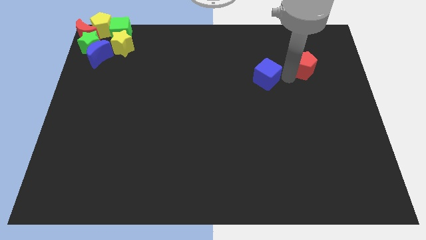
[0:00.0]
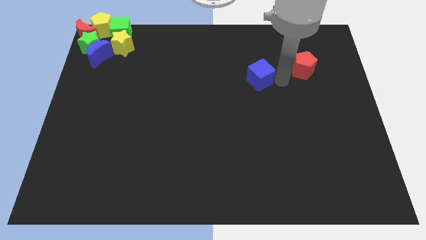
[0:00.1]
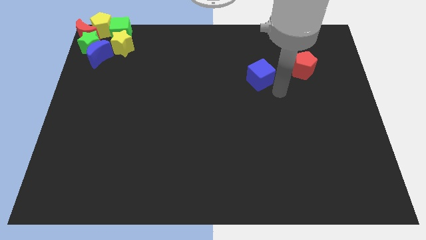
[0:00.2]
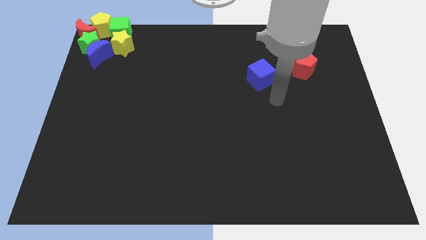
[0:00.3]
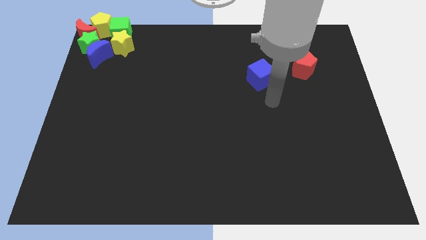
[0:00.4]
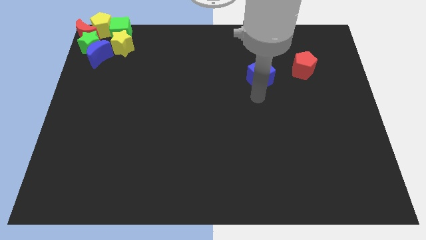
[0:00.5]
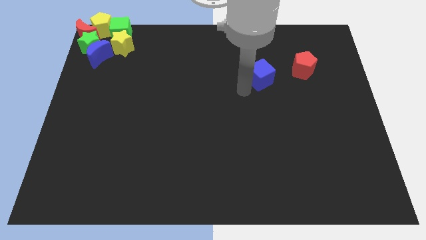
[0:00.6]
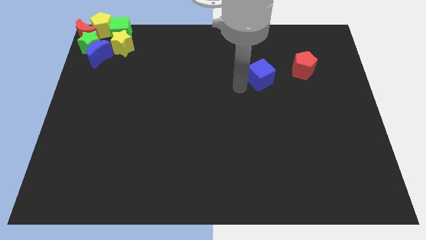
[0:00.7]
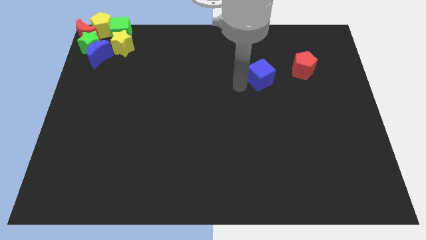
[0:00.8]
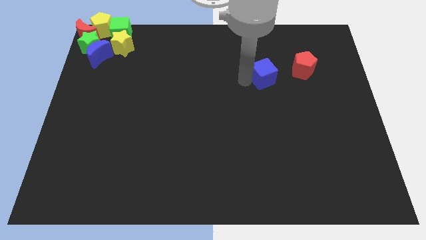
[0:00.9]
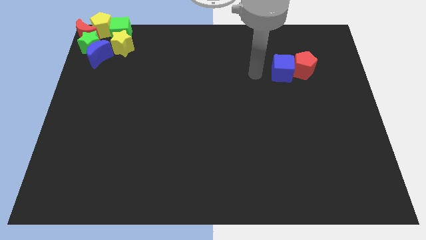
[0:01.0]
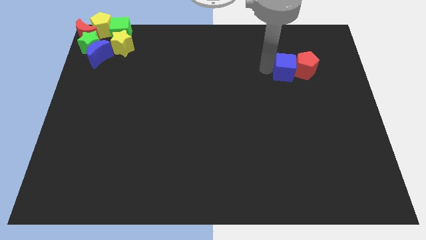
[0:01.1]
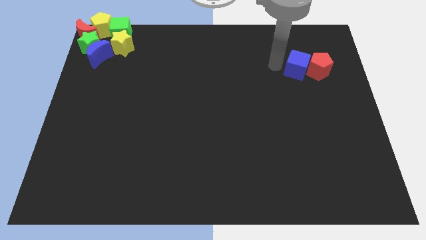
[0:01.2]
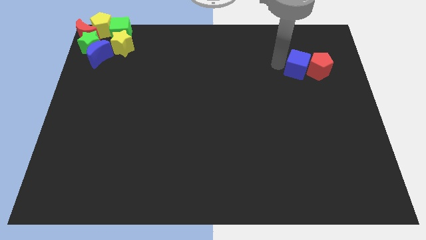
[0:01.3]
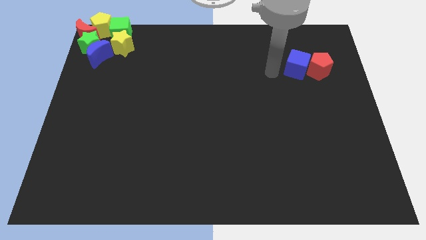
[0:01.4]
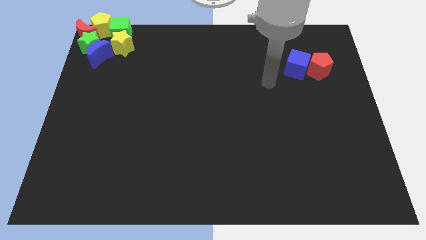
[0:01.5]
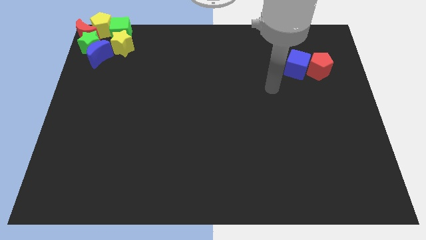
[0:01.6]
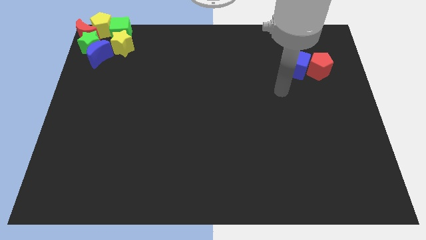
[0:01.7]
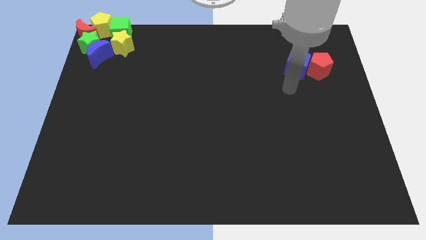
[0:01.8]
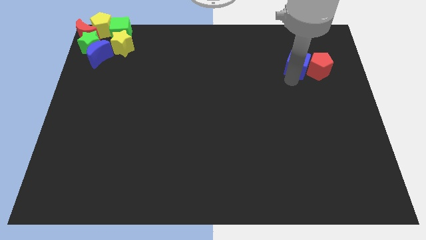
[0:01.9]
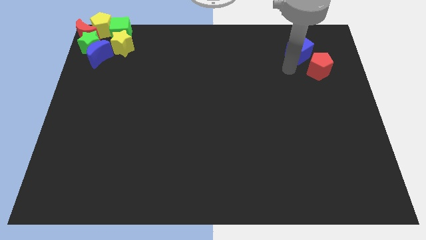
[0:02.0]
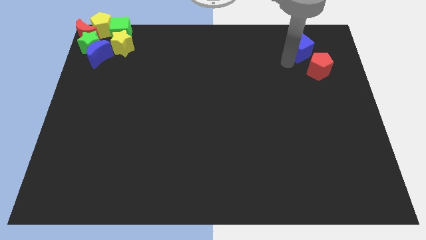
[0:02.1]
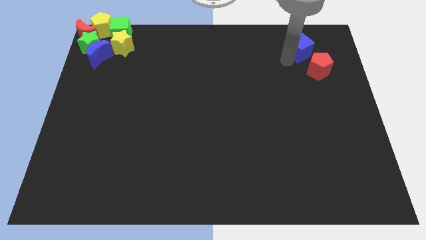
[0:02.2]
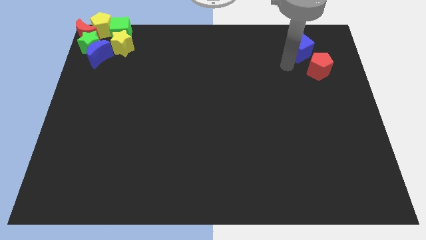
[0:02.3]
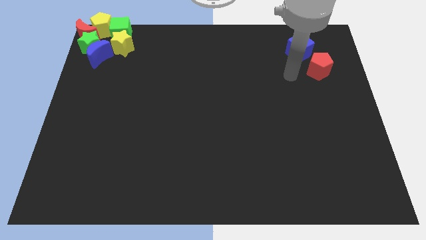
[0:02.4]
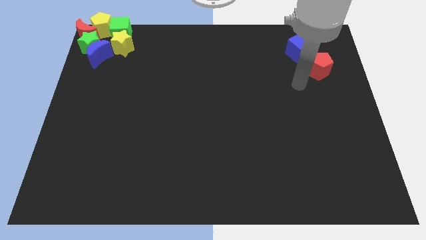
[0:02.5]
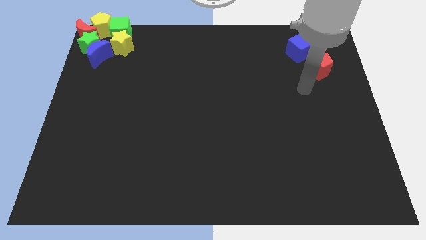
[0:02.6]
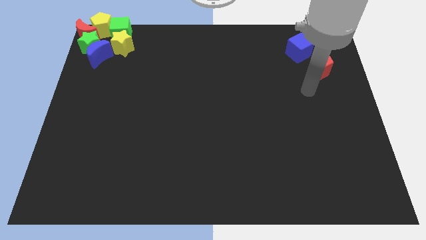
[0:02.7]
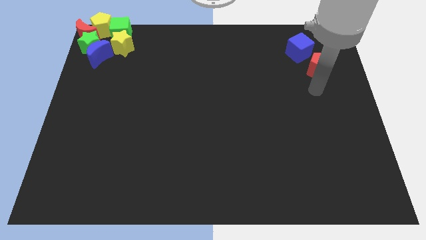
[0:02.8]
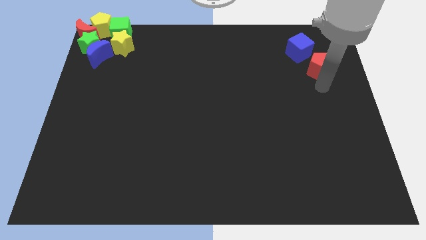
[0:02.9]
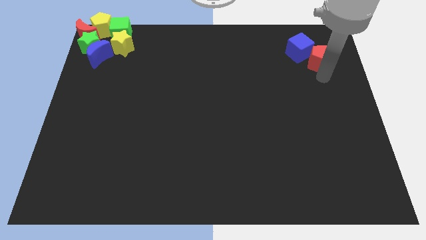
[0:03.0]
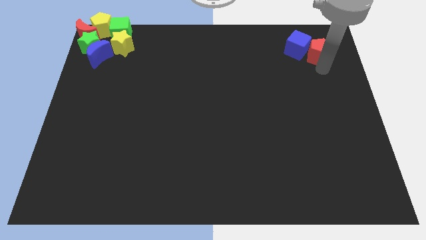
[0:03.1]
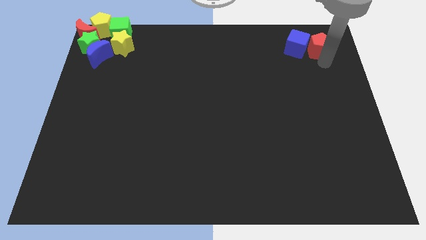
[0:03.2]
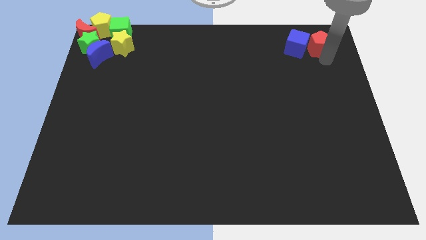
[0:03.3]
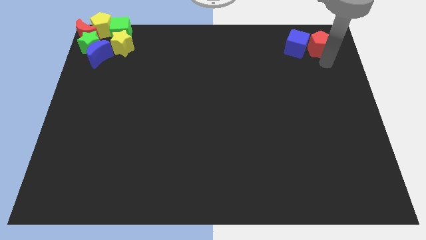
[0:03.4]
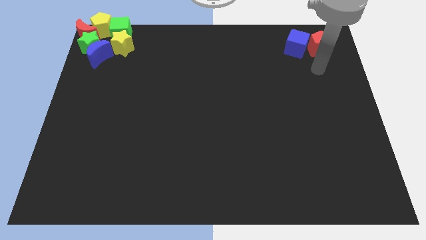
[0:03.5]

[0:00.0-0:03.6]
move the blue cube along with the red pentagon towards the top right

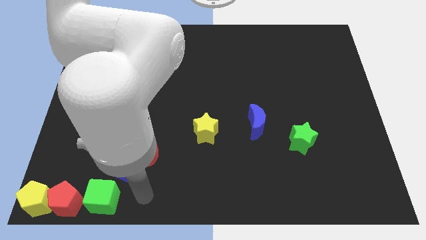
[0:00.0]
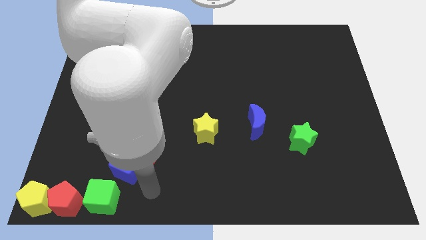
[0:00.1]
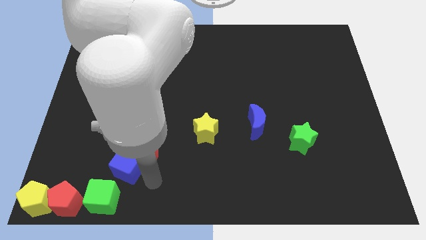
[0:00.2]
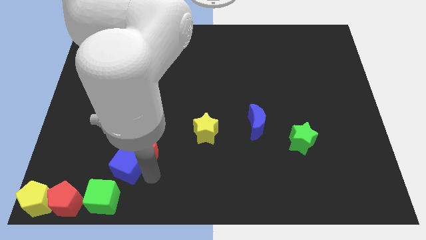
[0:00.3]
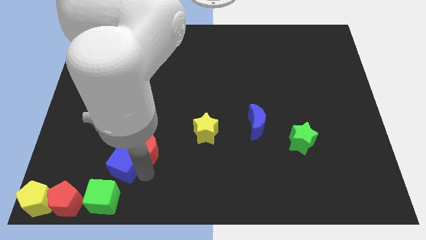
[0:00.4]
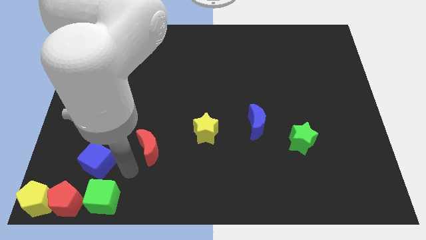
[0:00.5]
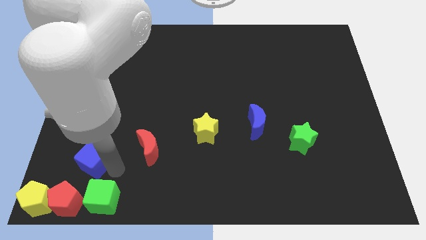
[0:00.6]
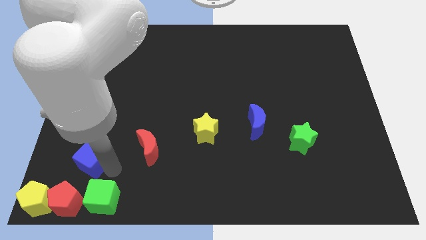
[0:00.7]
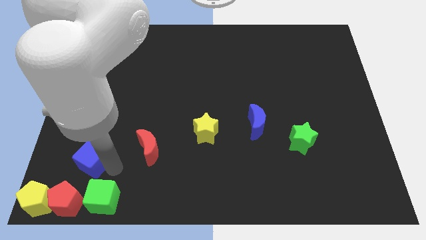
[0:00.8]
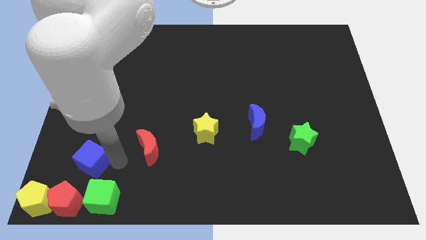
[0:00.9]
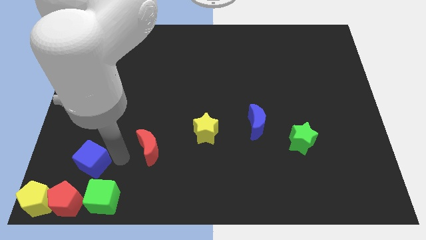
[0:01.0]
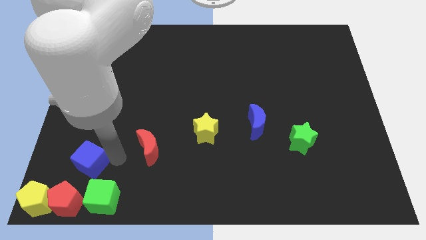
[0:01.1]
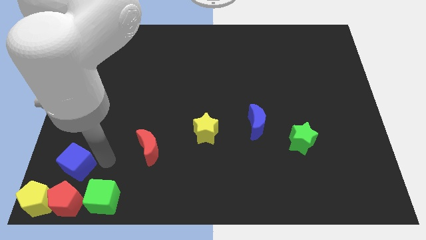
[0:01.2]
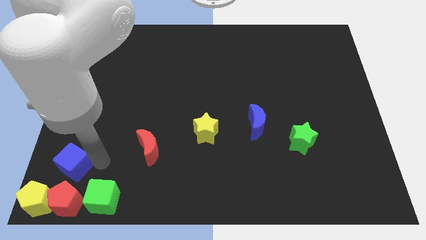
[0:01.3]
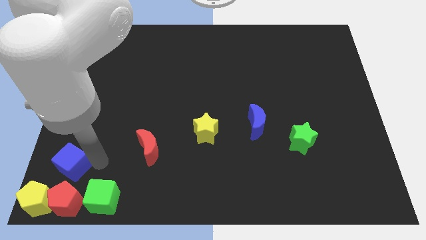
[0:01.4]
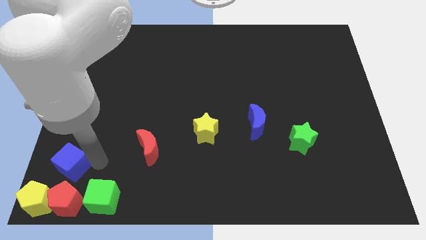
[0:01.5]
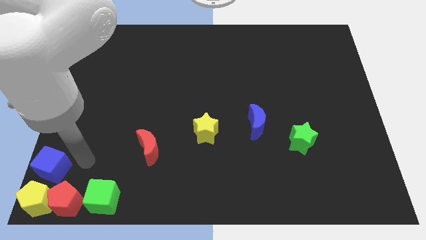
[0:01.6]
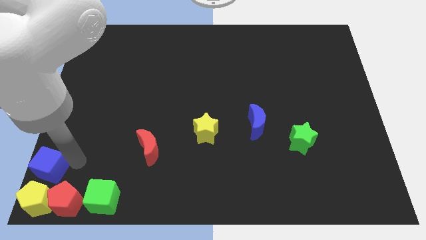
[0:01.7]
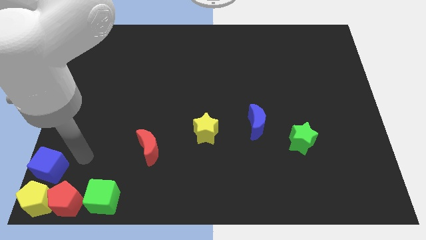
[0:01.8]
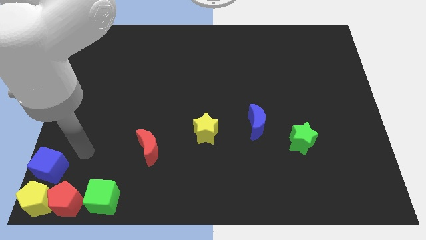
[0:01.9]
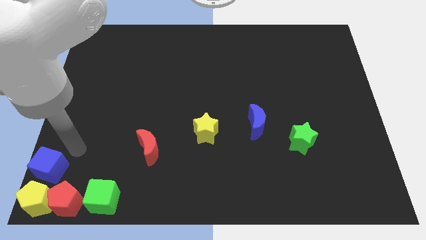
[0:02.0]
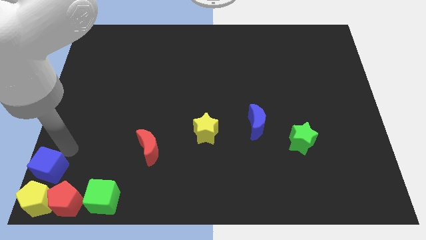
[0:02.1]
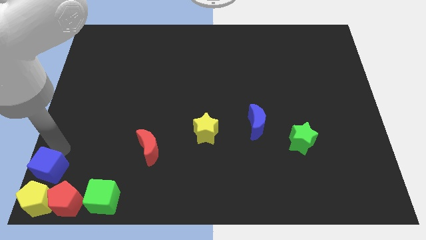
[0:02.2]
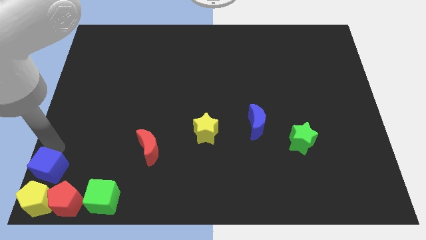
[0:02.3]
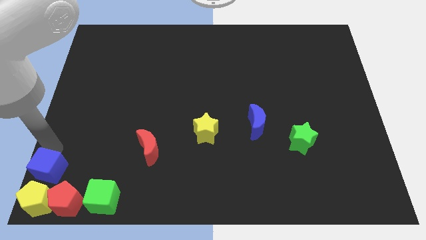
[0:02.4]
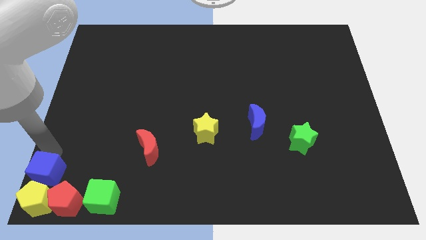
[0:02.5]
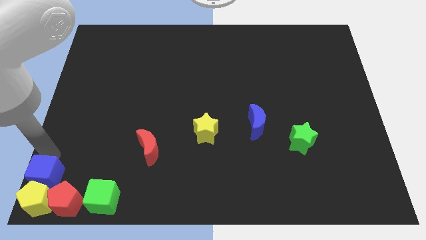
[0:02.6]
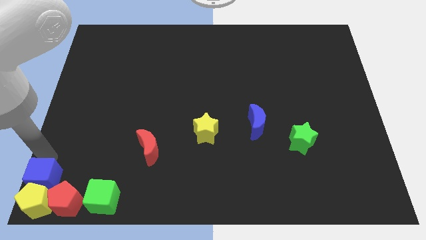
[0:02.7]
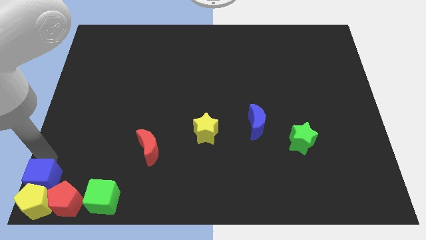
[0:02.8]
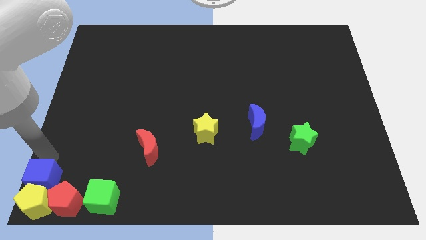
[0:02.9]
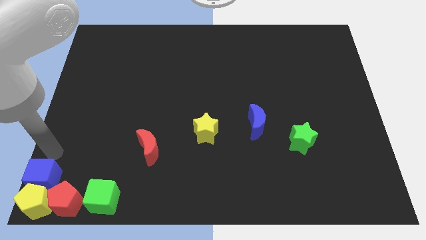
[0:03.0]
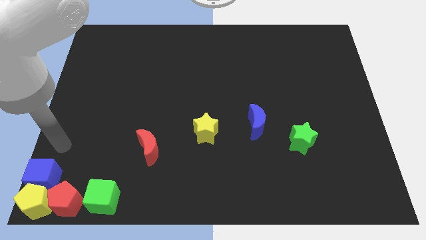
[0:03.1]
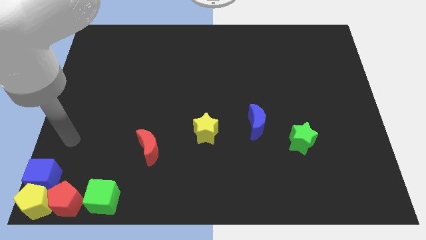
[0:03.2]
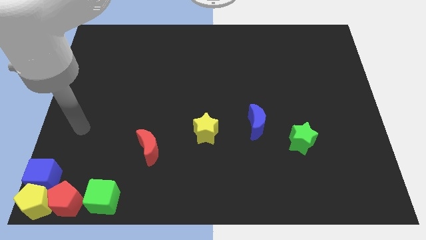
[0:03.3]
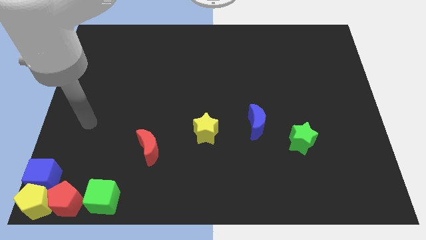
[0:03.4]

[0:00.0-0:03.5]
move the blue cube towards the yellow pentagon

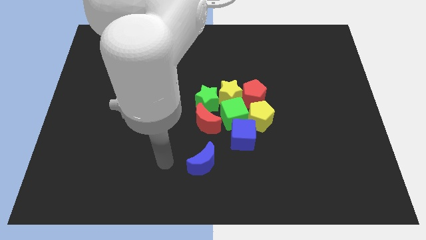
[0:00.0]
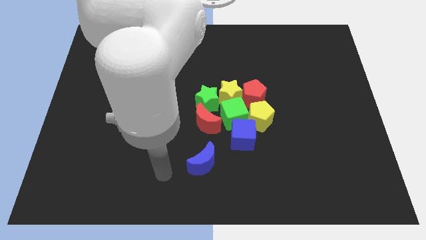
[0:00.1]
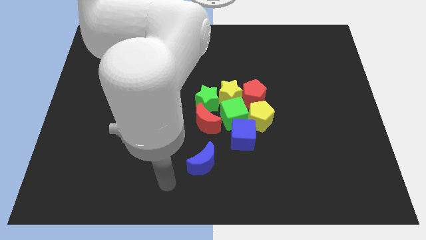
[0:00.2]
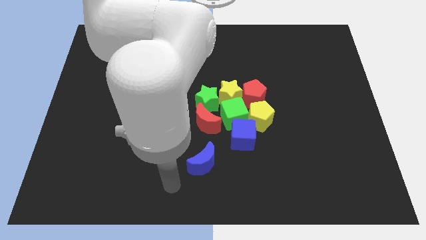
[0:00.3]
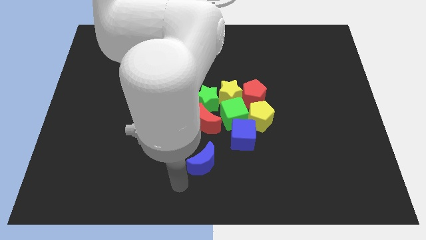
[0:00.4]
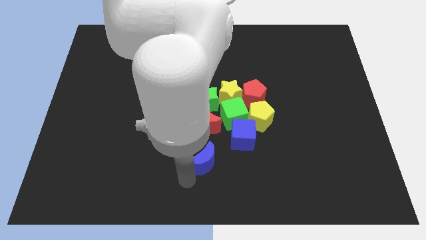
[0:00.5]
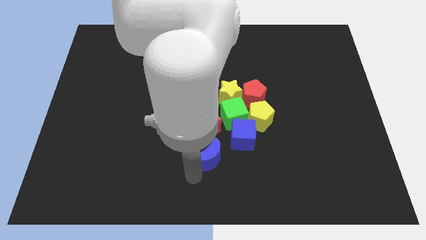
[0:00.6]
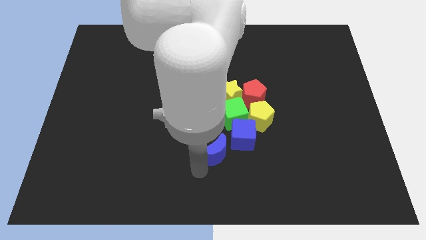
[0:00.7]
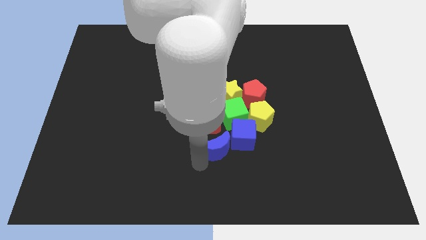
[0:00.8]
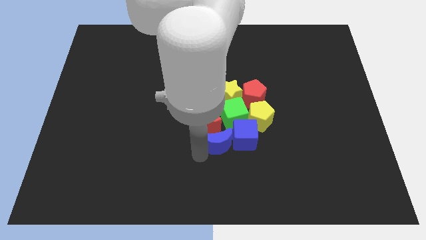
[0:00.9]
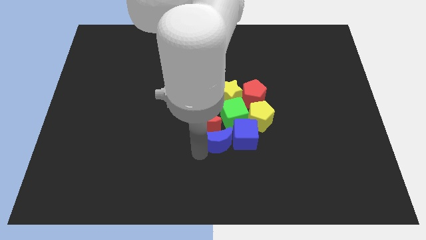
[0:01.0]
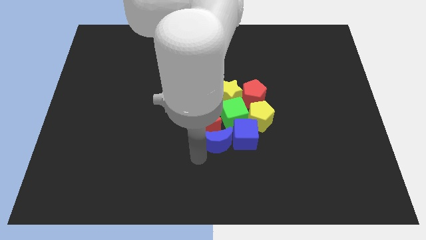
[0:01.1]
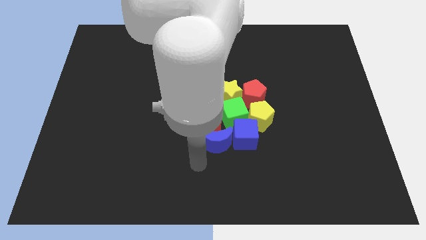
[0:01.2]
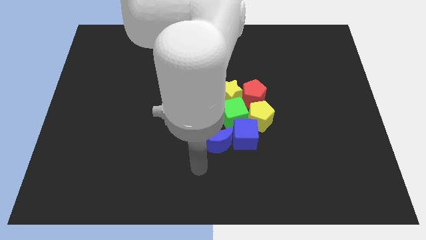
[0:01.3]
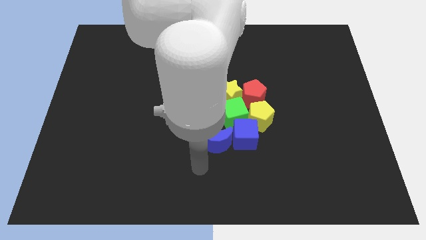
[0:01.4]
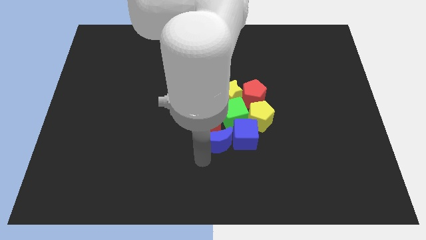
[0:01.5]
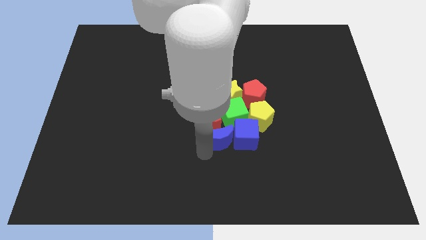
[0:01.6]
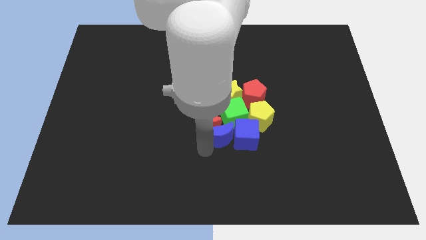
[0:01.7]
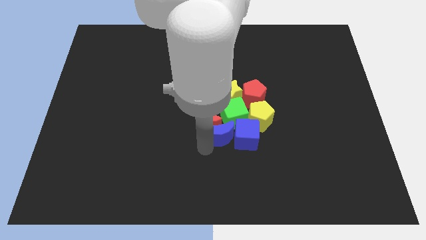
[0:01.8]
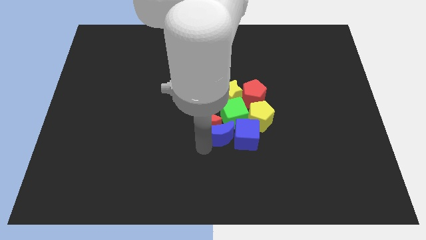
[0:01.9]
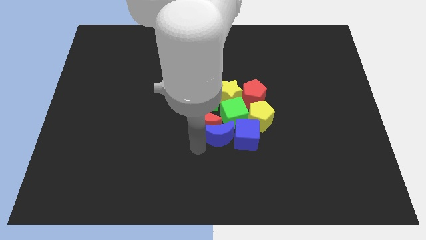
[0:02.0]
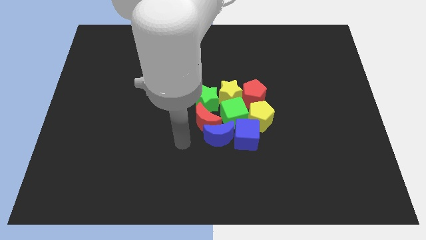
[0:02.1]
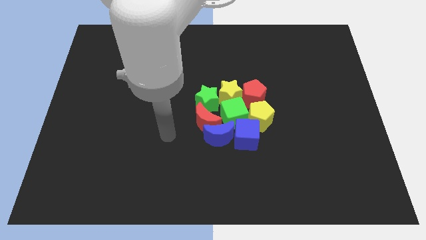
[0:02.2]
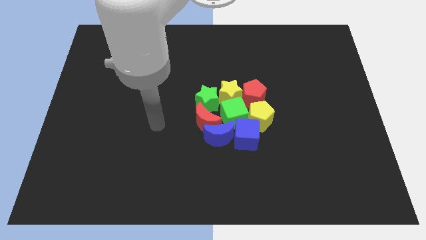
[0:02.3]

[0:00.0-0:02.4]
push the blue crescent to the bottom of red crescent
